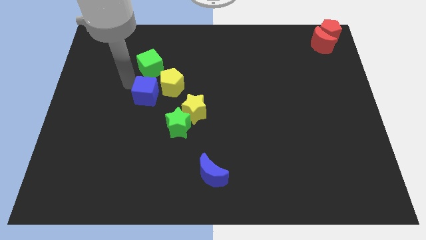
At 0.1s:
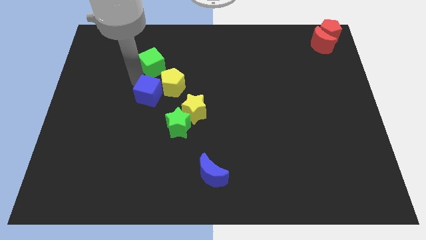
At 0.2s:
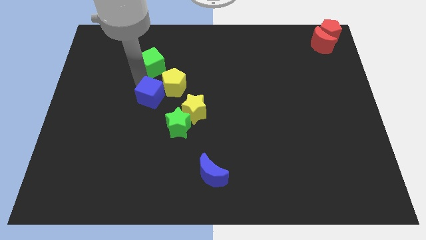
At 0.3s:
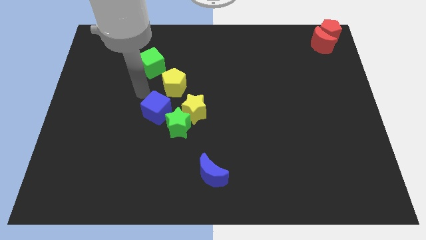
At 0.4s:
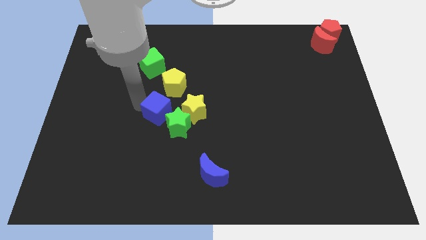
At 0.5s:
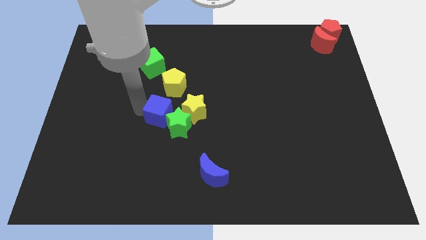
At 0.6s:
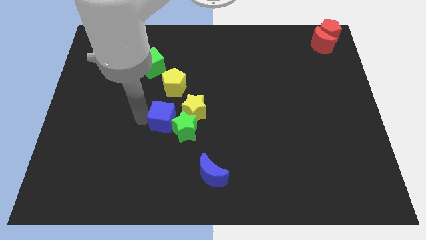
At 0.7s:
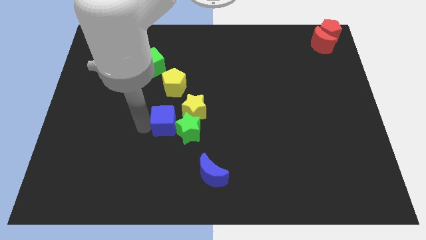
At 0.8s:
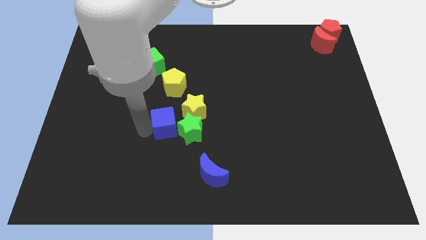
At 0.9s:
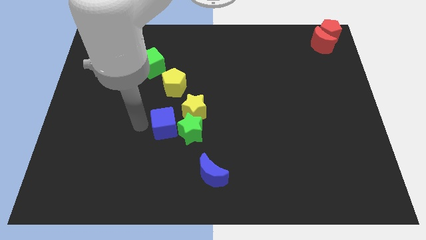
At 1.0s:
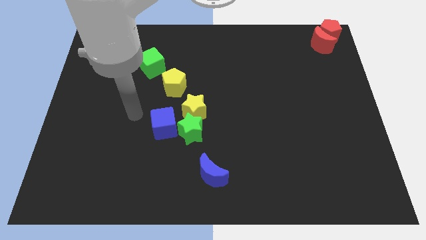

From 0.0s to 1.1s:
separate the cubes

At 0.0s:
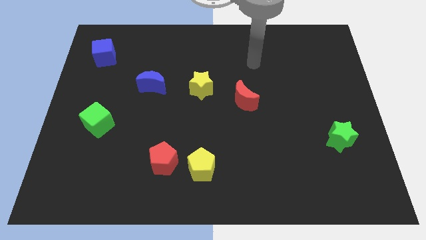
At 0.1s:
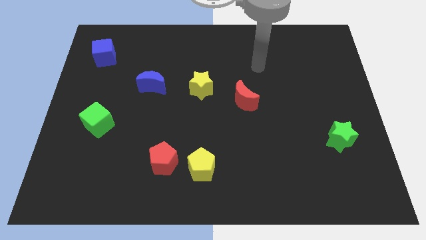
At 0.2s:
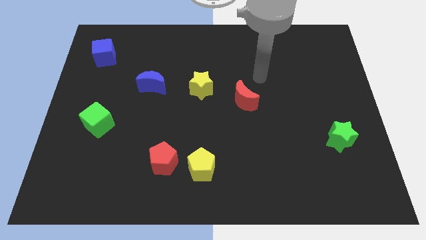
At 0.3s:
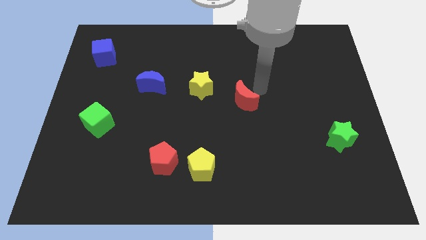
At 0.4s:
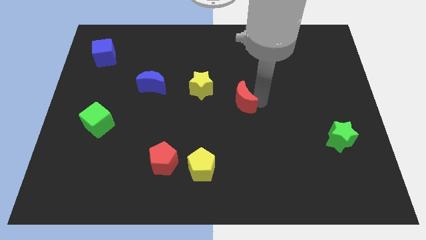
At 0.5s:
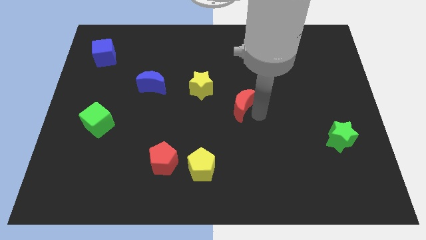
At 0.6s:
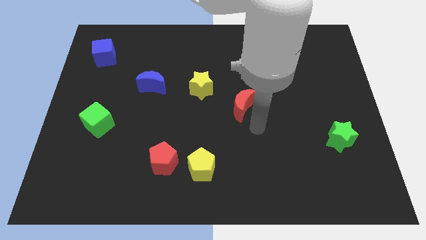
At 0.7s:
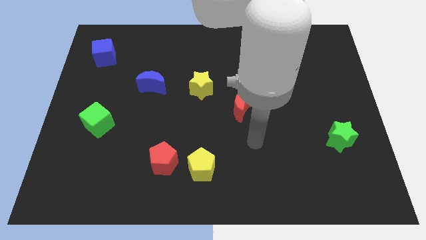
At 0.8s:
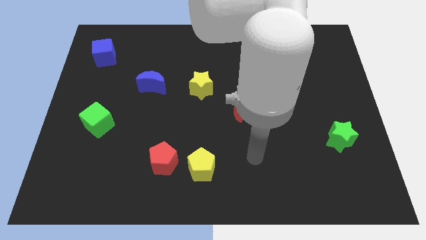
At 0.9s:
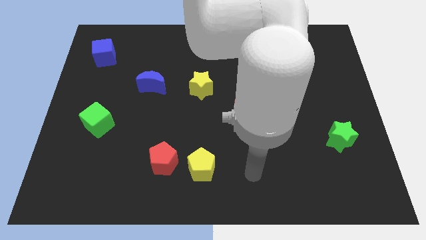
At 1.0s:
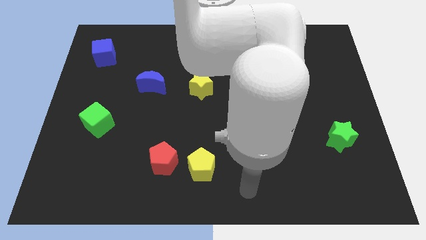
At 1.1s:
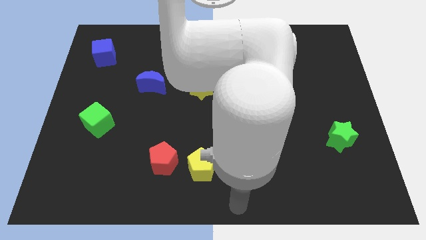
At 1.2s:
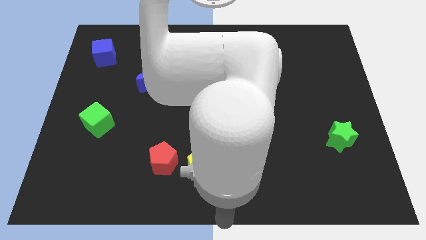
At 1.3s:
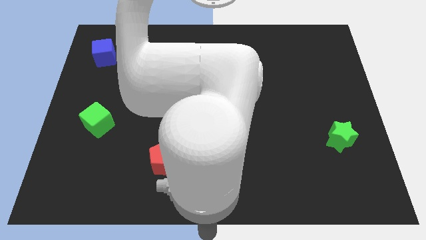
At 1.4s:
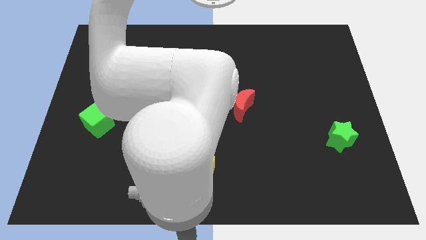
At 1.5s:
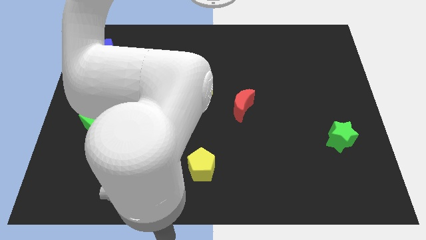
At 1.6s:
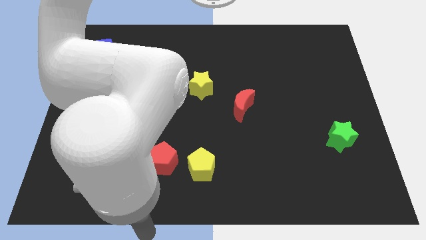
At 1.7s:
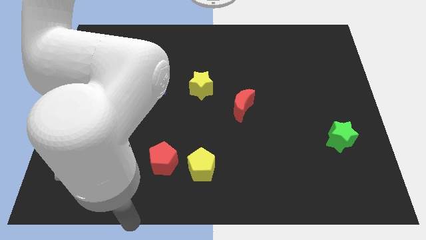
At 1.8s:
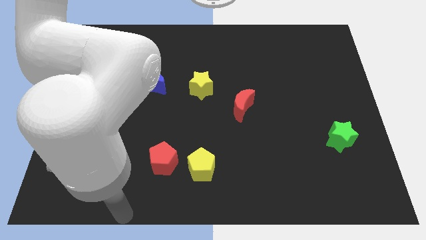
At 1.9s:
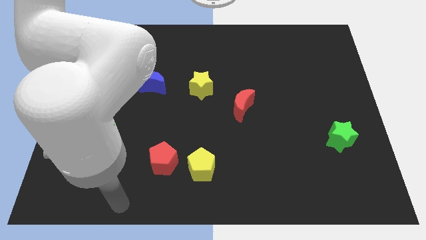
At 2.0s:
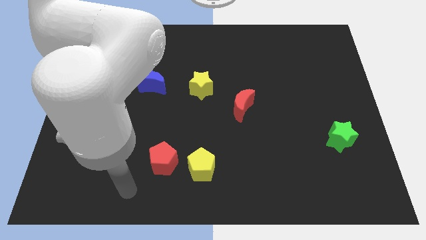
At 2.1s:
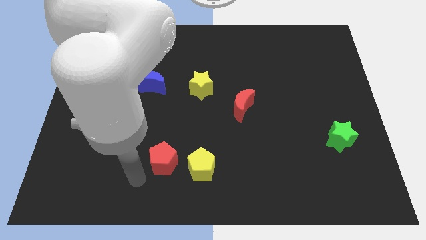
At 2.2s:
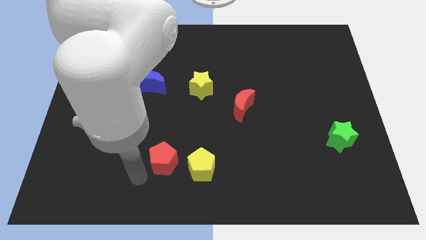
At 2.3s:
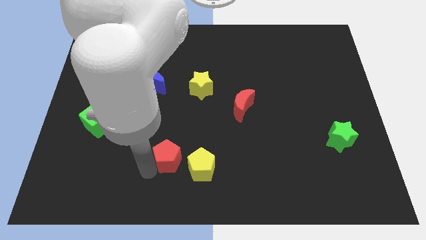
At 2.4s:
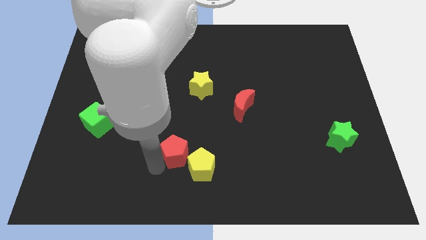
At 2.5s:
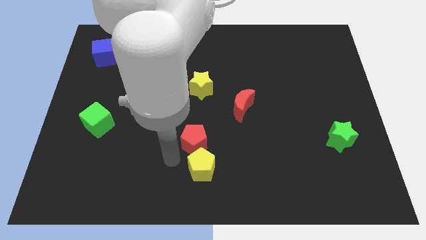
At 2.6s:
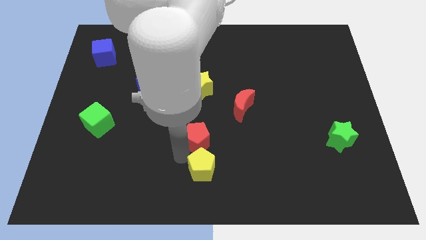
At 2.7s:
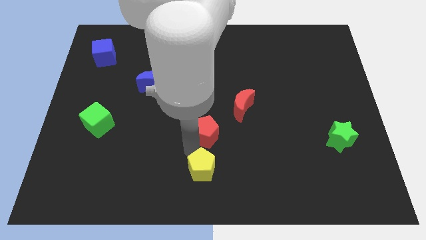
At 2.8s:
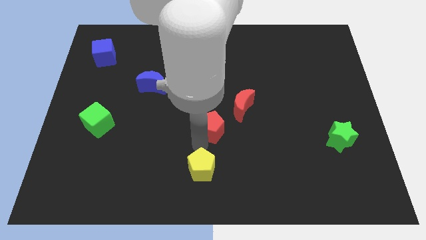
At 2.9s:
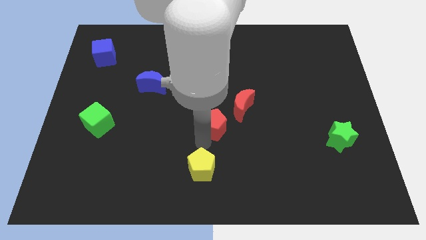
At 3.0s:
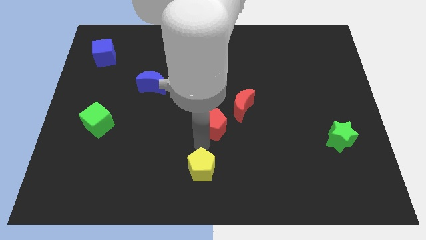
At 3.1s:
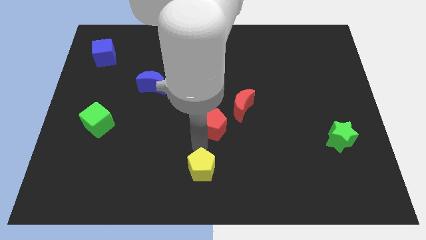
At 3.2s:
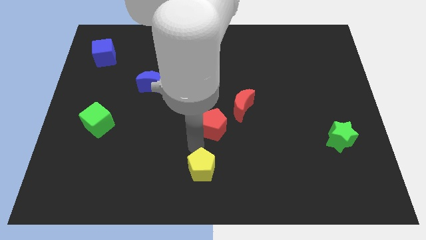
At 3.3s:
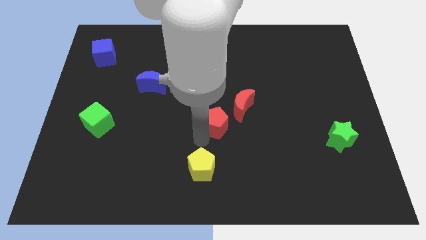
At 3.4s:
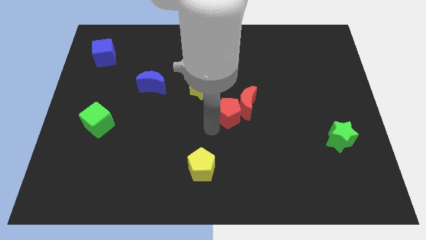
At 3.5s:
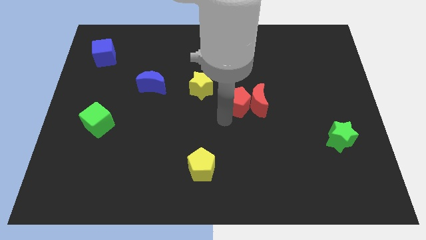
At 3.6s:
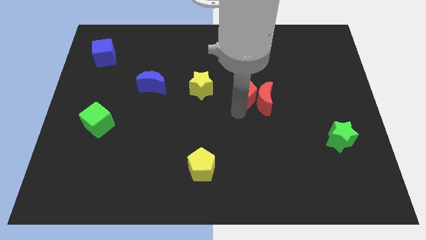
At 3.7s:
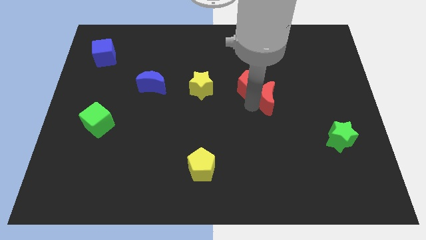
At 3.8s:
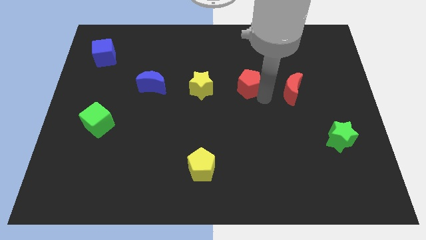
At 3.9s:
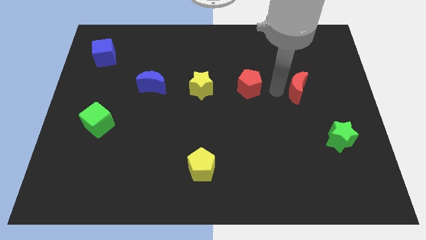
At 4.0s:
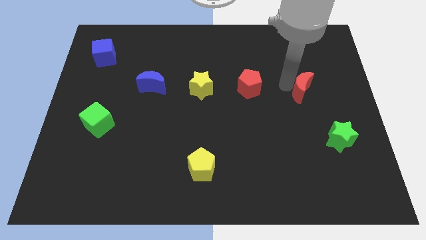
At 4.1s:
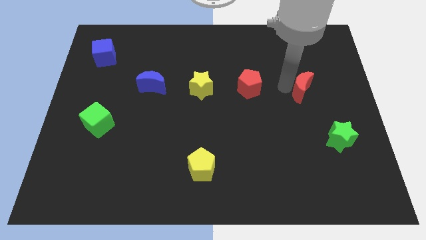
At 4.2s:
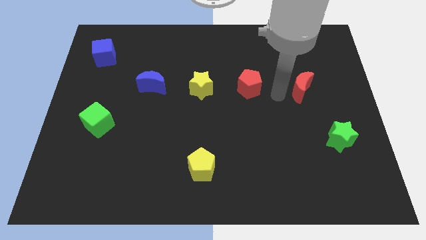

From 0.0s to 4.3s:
slightly push the red crescent to the top side

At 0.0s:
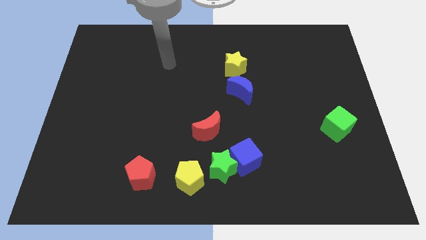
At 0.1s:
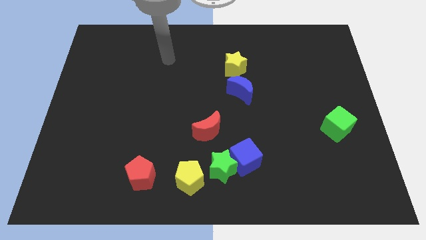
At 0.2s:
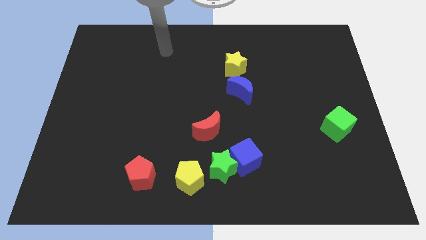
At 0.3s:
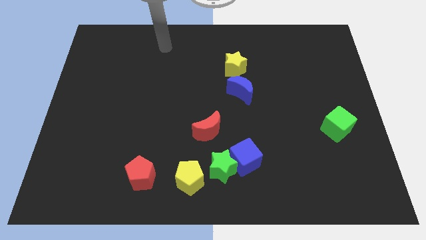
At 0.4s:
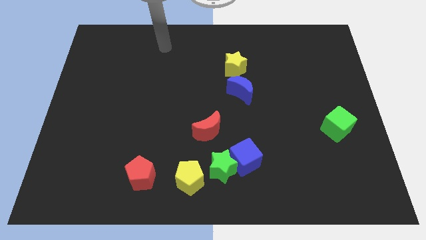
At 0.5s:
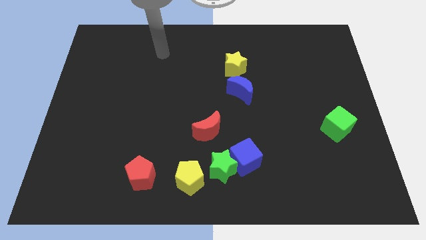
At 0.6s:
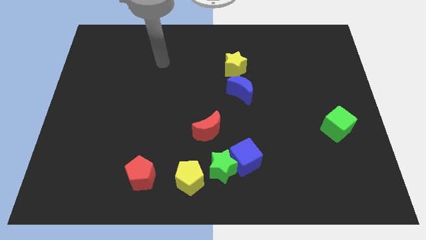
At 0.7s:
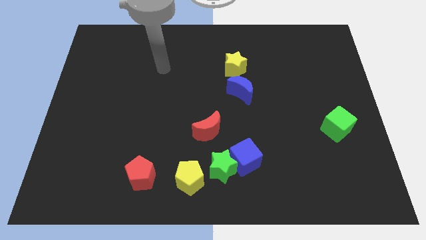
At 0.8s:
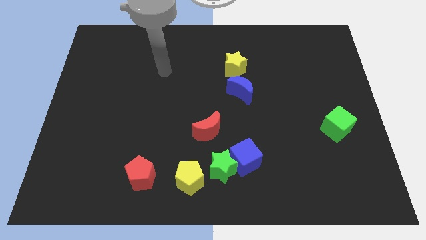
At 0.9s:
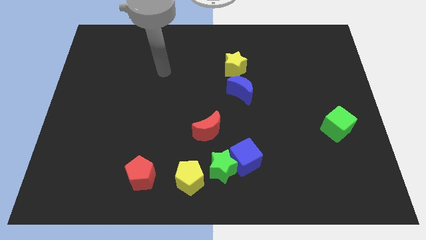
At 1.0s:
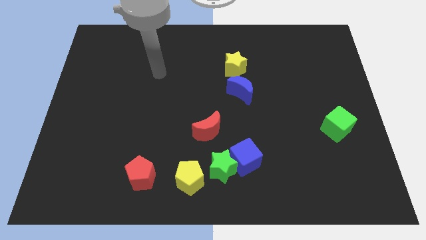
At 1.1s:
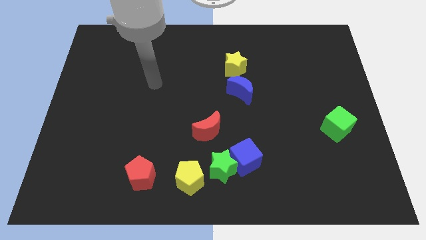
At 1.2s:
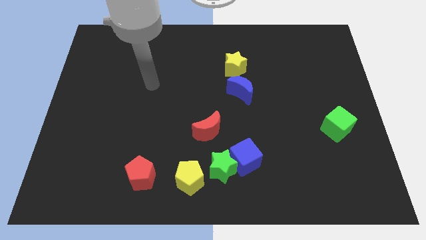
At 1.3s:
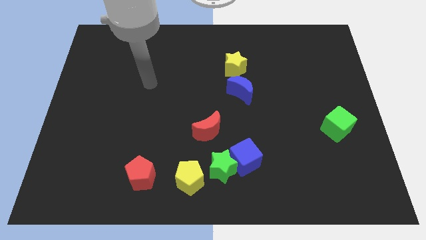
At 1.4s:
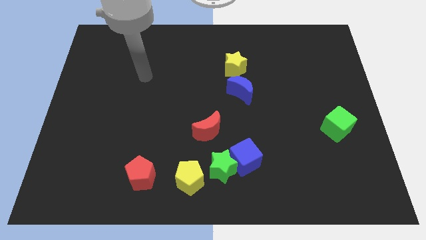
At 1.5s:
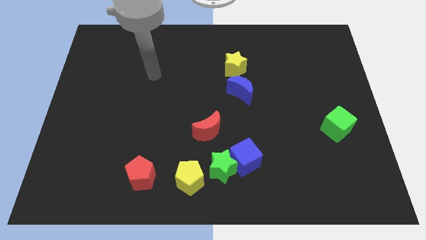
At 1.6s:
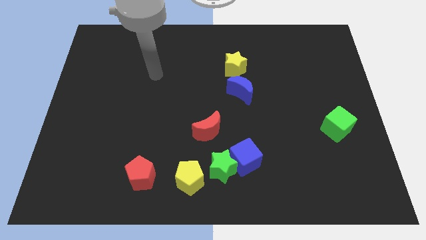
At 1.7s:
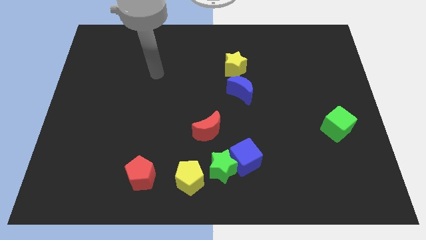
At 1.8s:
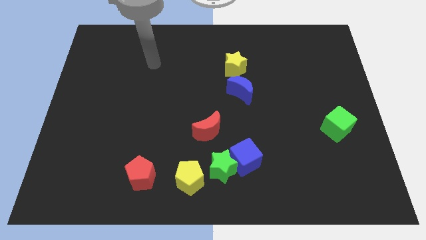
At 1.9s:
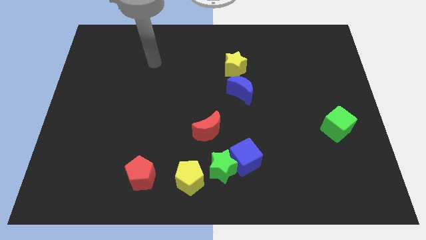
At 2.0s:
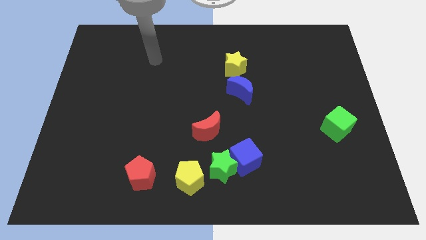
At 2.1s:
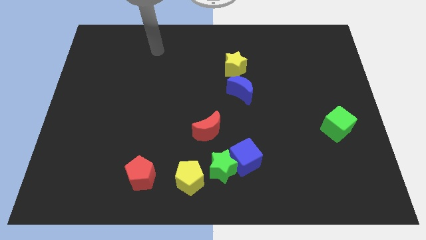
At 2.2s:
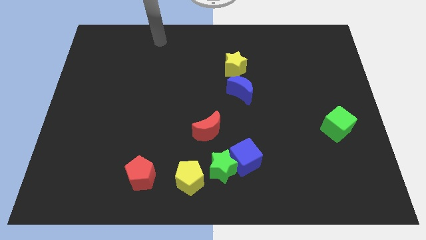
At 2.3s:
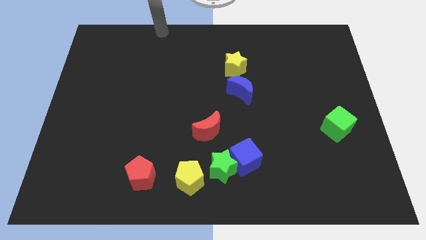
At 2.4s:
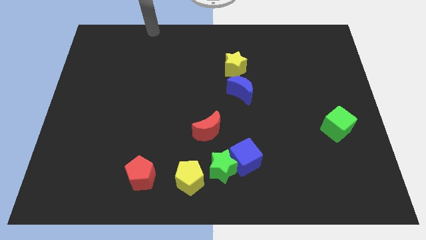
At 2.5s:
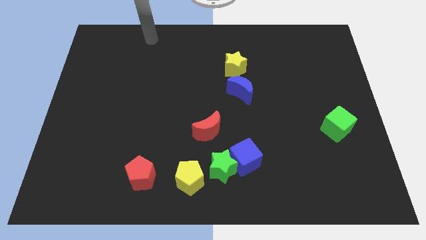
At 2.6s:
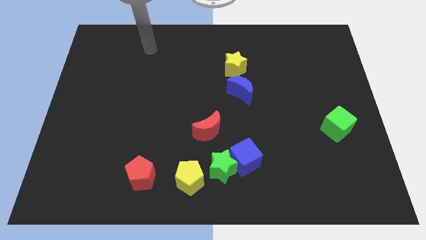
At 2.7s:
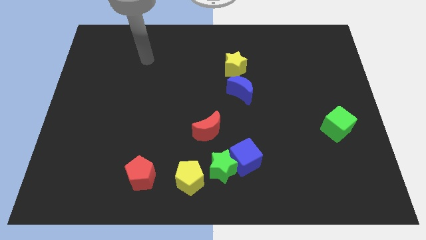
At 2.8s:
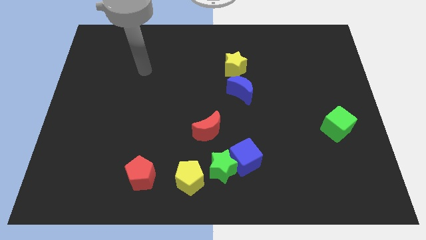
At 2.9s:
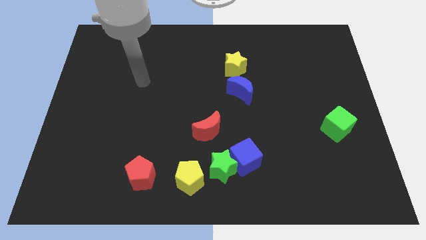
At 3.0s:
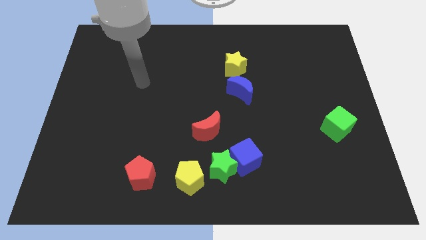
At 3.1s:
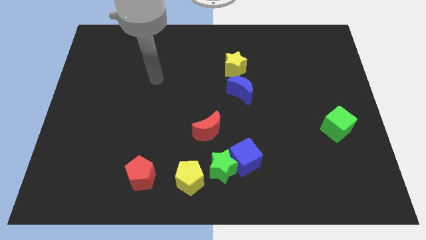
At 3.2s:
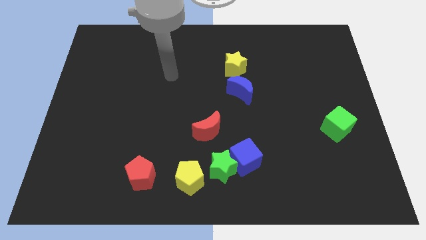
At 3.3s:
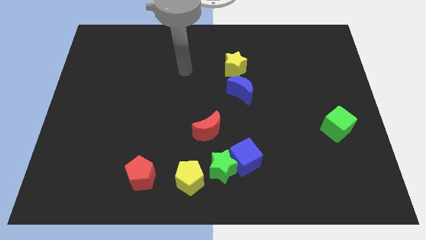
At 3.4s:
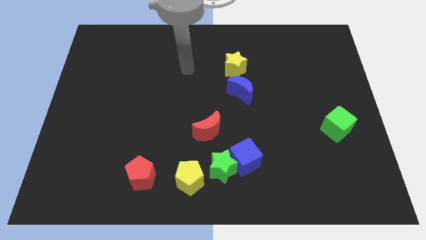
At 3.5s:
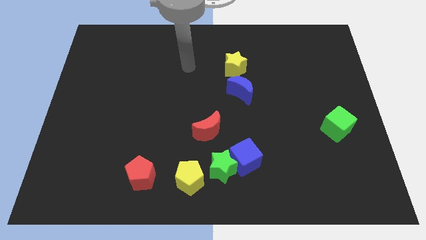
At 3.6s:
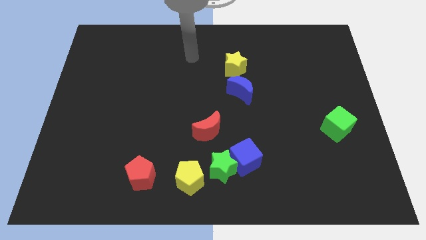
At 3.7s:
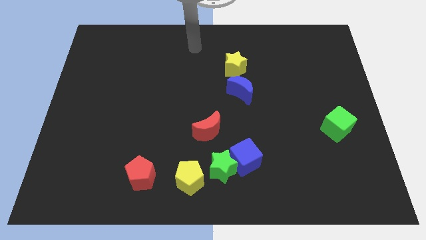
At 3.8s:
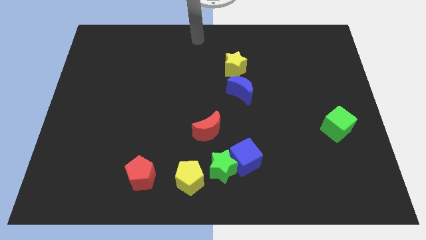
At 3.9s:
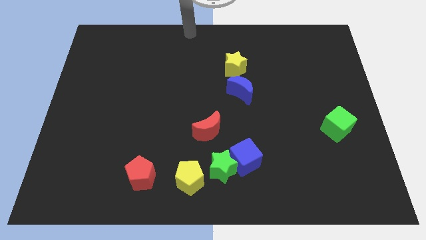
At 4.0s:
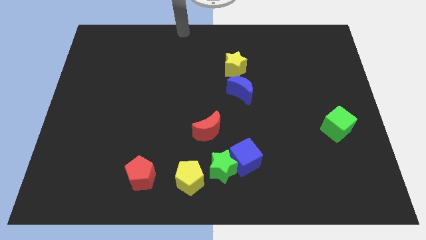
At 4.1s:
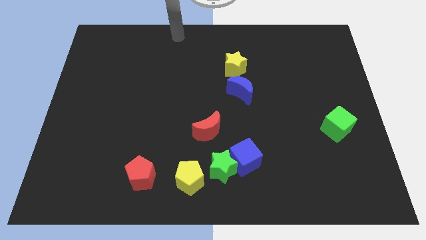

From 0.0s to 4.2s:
place your arm at the top of the board
